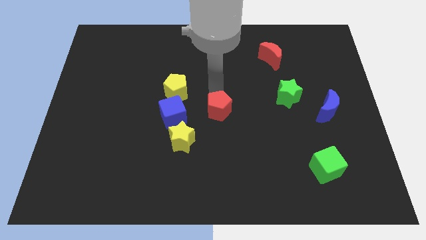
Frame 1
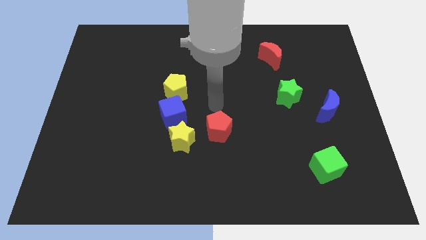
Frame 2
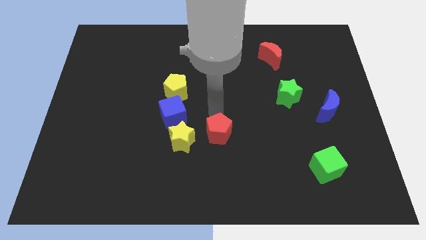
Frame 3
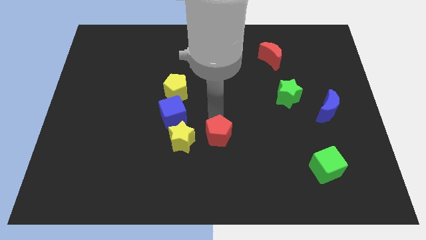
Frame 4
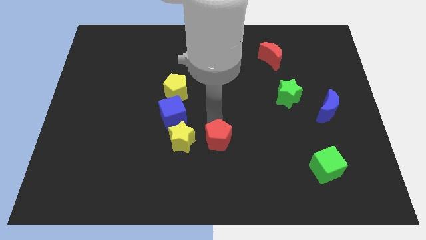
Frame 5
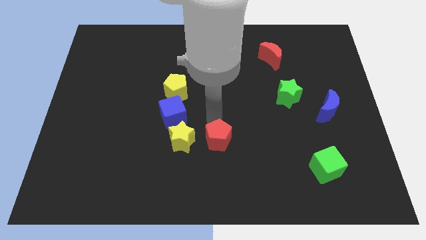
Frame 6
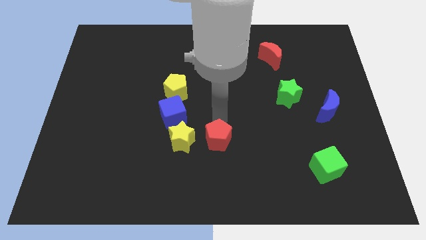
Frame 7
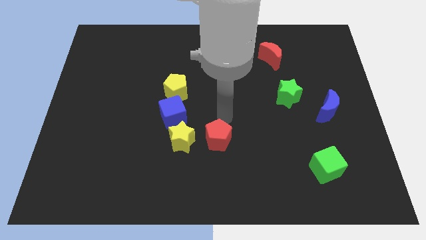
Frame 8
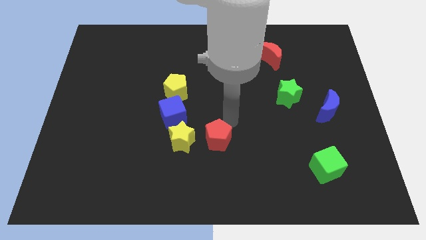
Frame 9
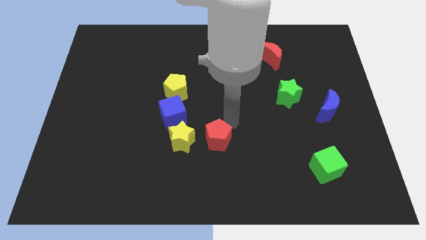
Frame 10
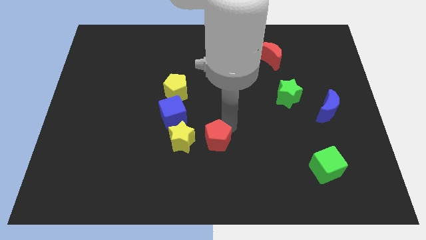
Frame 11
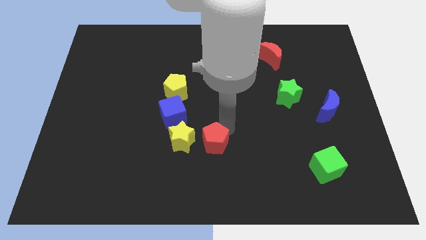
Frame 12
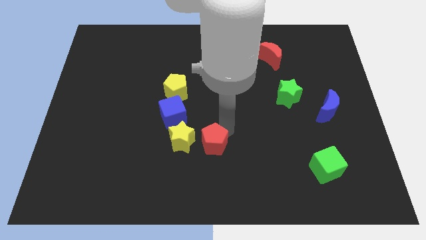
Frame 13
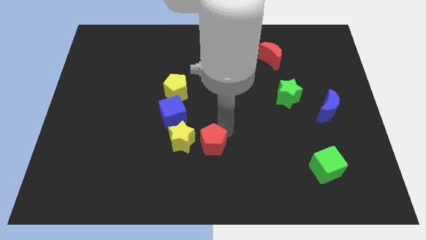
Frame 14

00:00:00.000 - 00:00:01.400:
place red pentagon to the right of yellow star

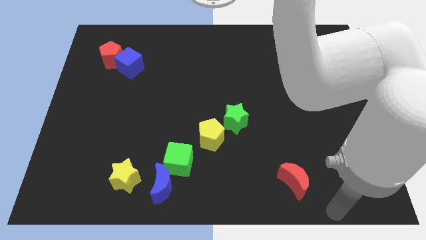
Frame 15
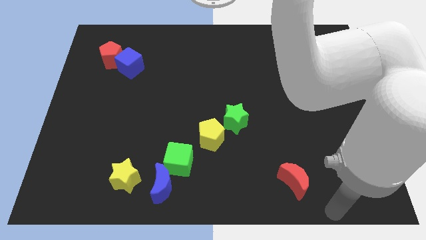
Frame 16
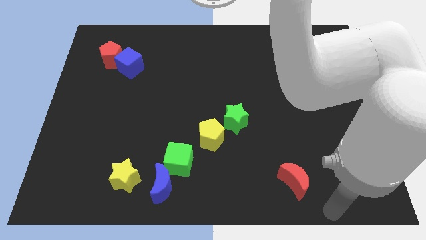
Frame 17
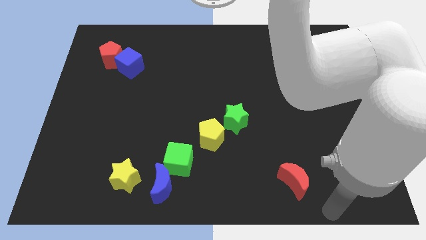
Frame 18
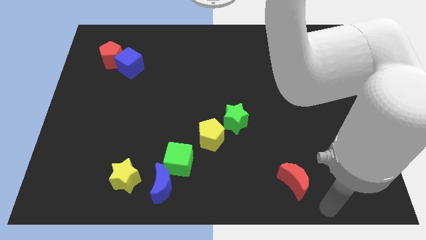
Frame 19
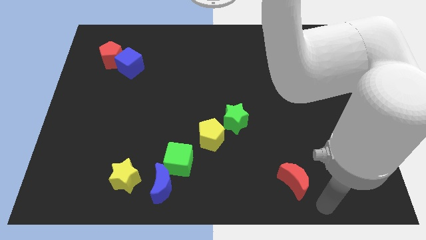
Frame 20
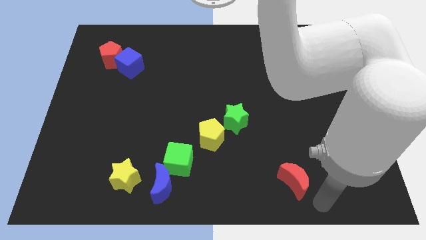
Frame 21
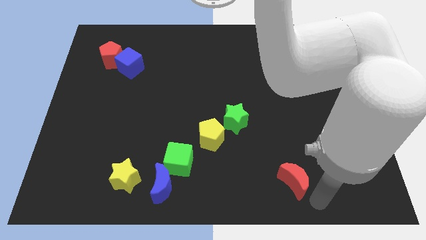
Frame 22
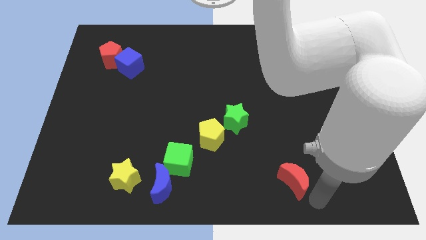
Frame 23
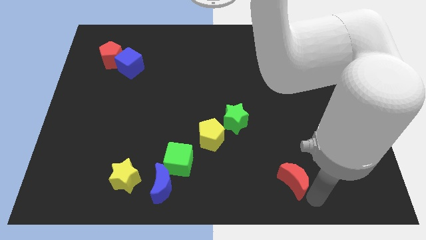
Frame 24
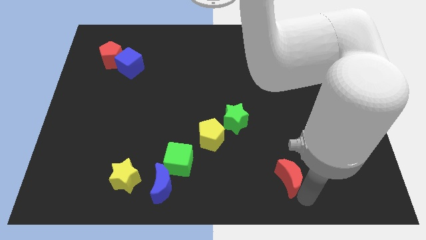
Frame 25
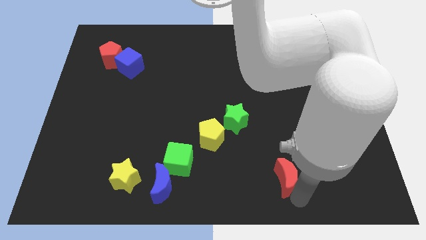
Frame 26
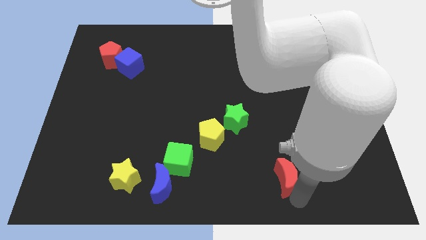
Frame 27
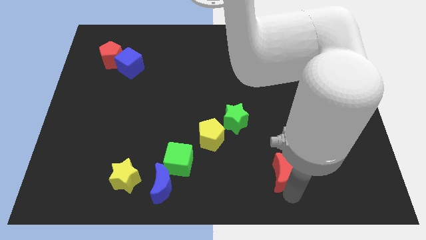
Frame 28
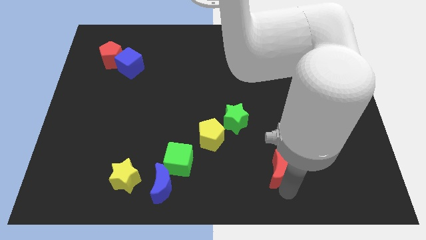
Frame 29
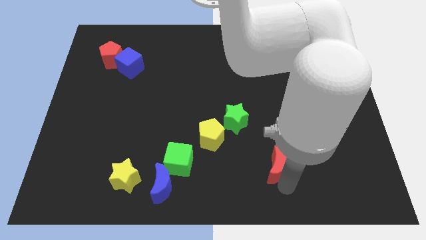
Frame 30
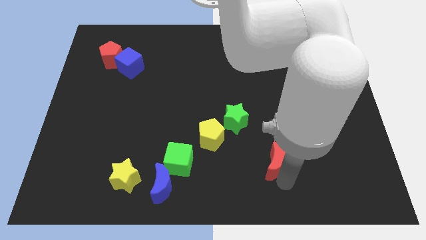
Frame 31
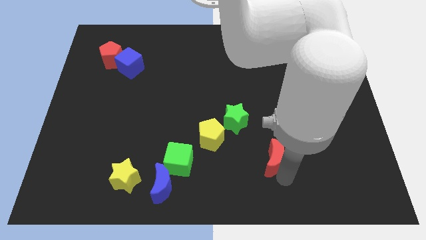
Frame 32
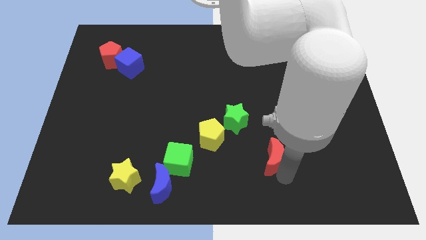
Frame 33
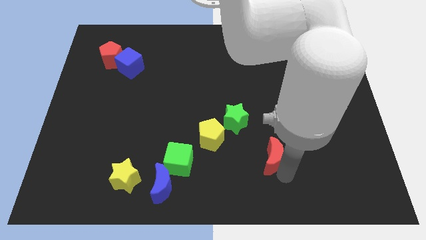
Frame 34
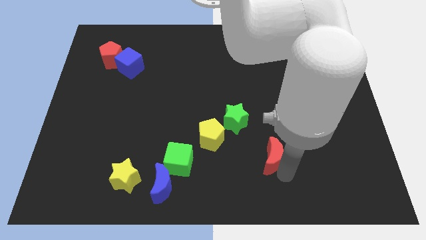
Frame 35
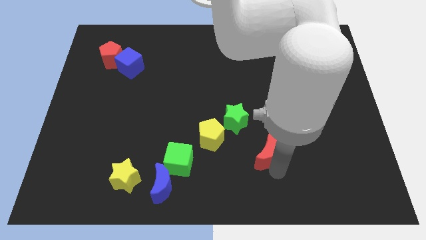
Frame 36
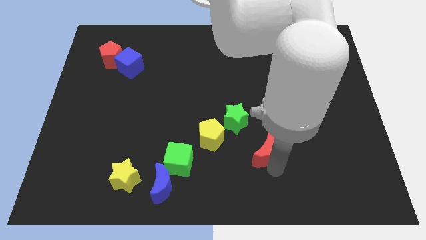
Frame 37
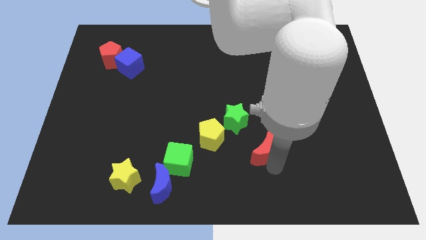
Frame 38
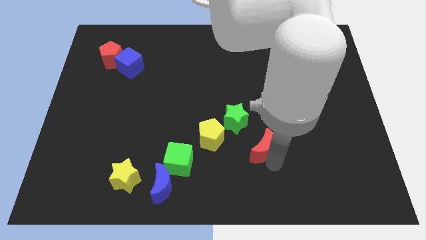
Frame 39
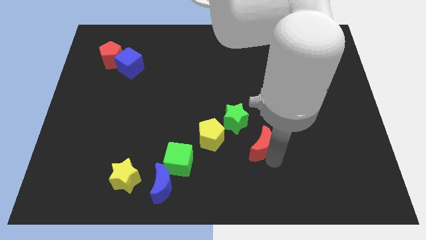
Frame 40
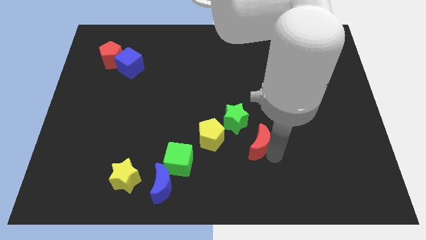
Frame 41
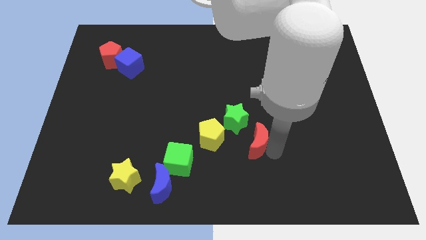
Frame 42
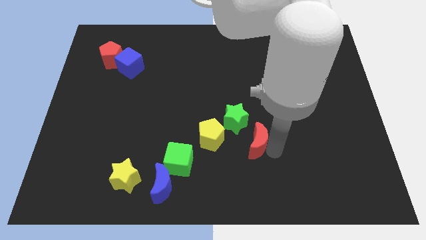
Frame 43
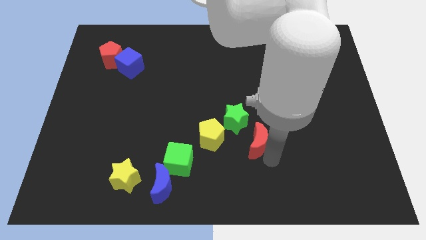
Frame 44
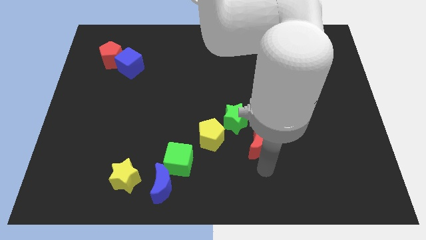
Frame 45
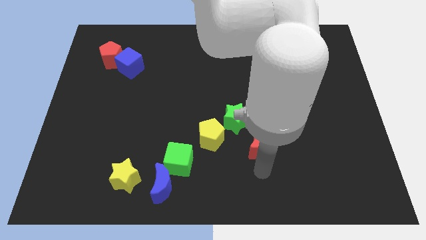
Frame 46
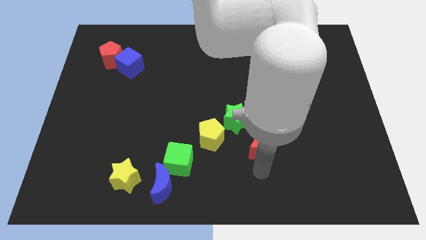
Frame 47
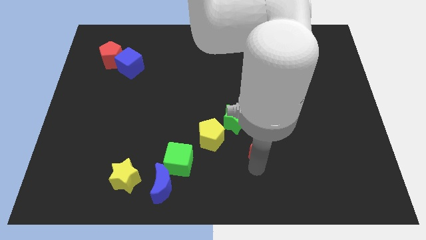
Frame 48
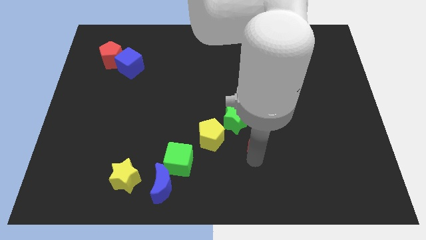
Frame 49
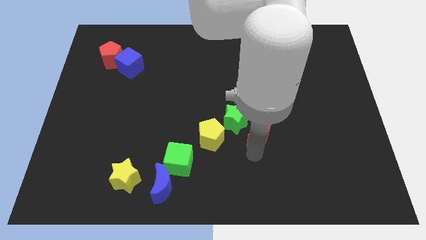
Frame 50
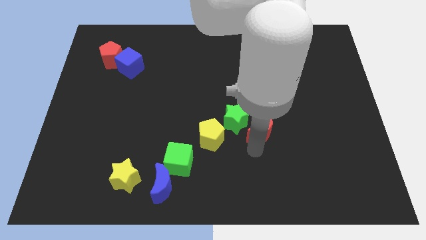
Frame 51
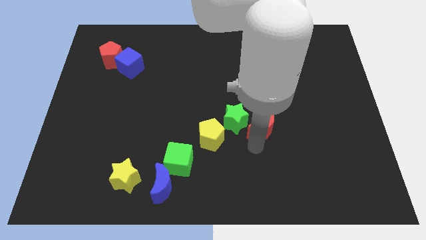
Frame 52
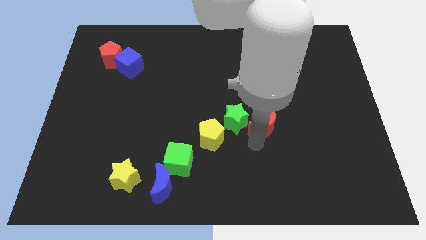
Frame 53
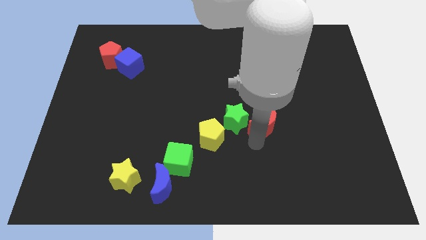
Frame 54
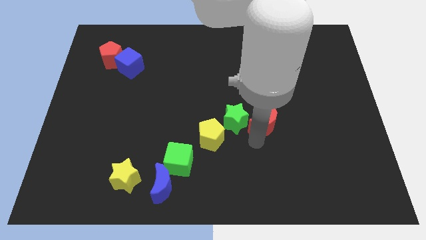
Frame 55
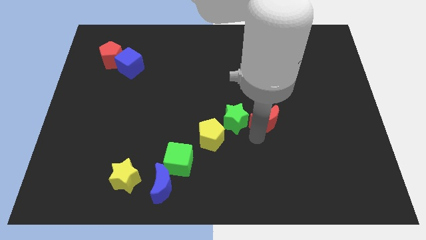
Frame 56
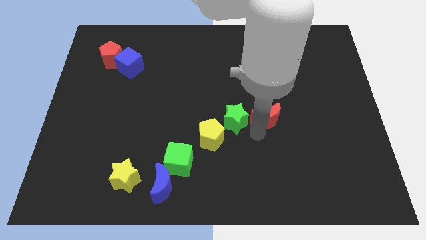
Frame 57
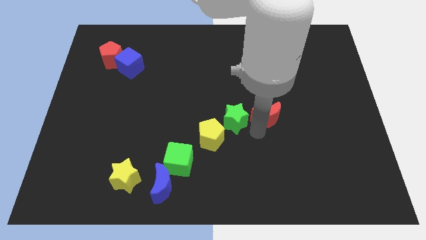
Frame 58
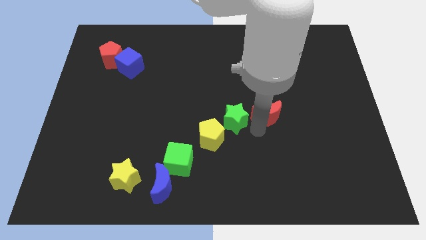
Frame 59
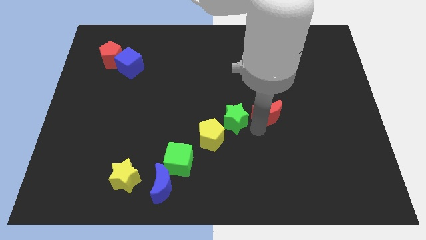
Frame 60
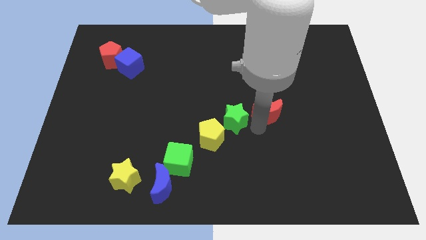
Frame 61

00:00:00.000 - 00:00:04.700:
place the red crescent to the right side of the green star

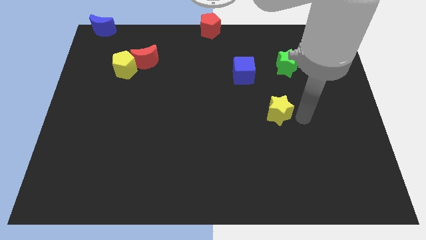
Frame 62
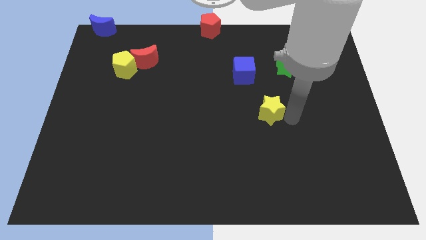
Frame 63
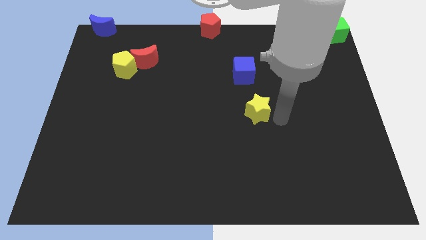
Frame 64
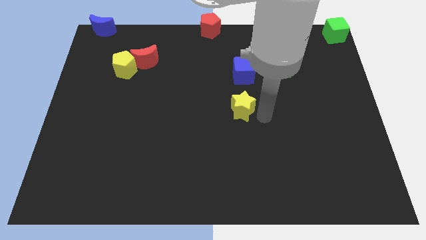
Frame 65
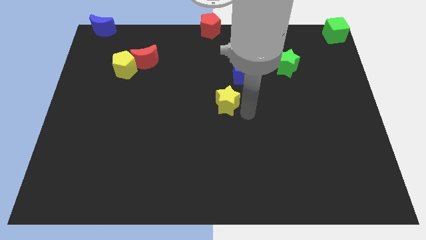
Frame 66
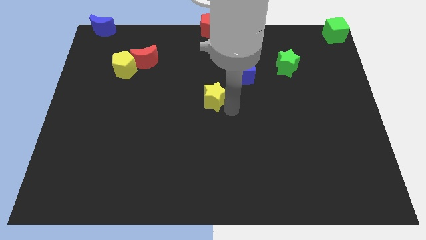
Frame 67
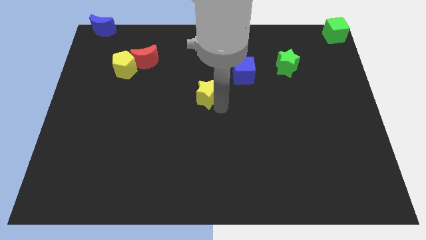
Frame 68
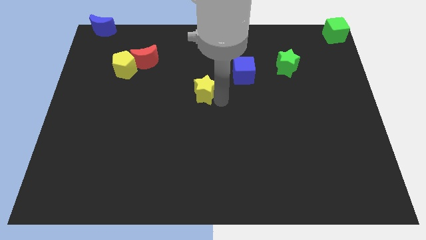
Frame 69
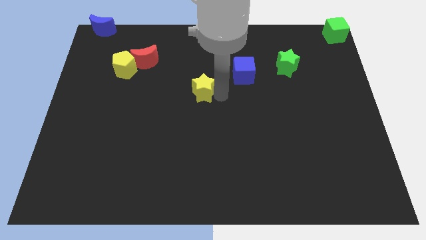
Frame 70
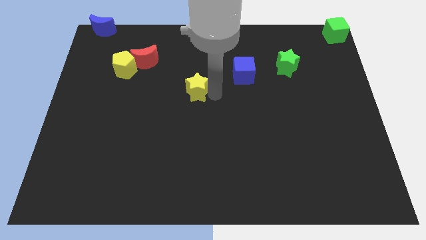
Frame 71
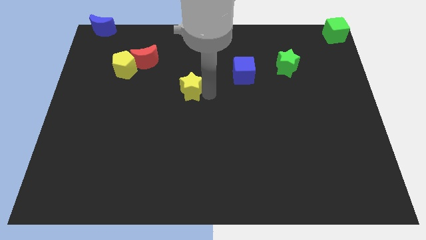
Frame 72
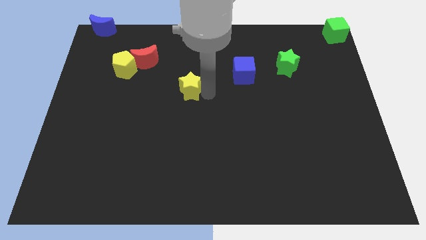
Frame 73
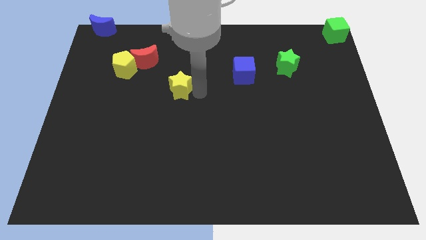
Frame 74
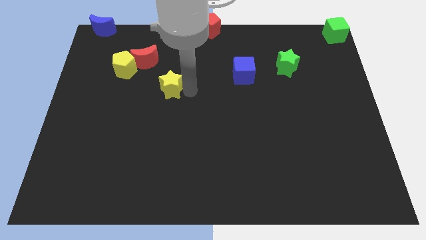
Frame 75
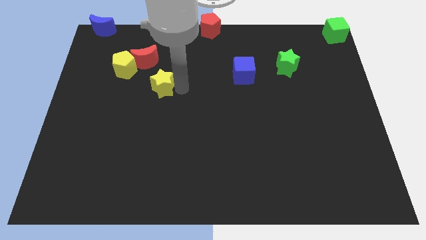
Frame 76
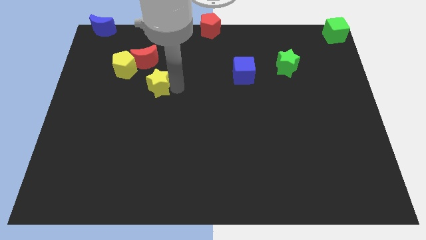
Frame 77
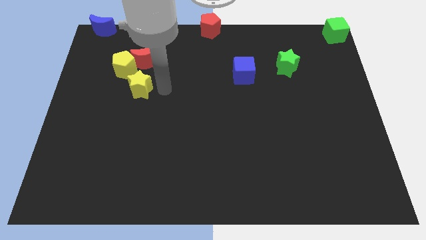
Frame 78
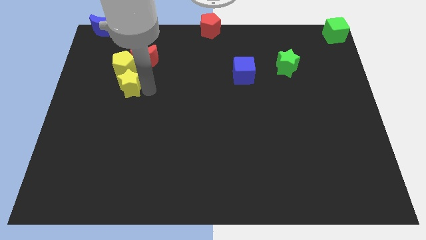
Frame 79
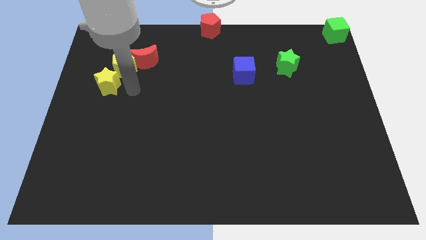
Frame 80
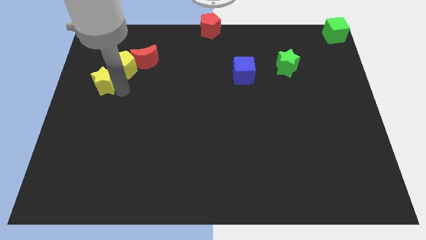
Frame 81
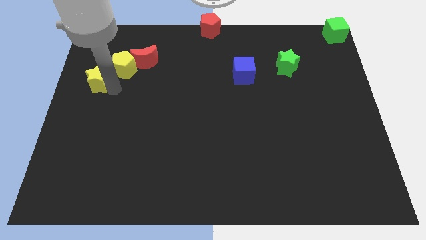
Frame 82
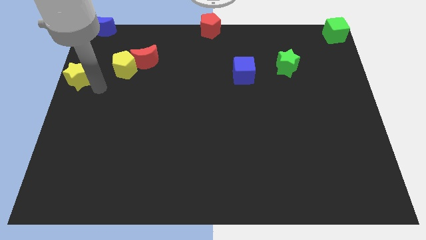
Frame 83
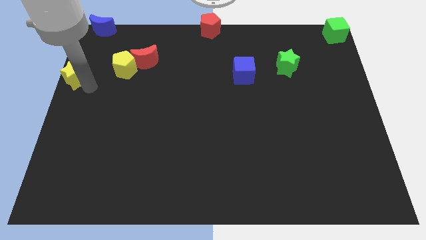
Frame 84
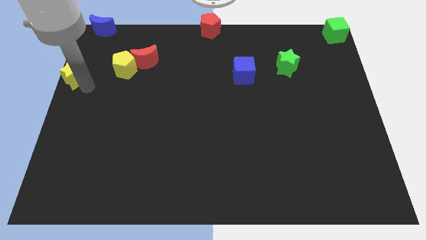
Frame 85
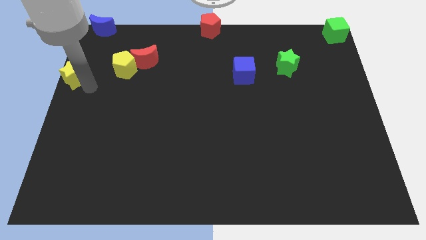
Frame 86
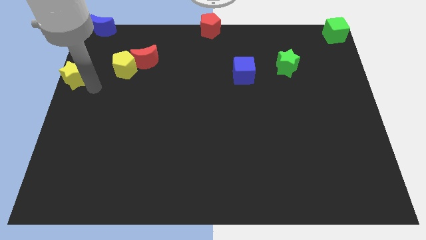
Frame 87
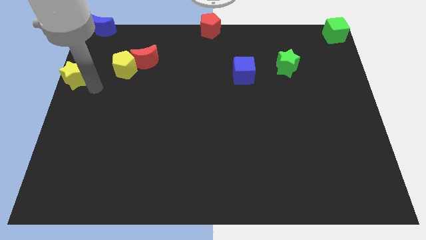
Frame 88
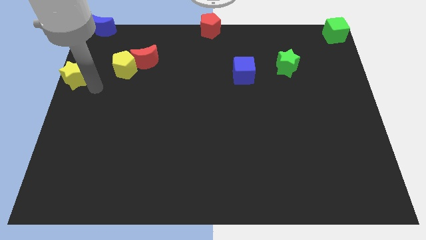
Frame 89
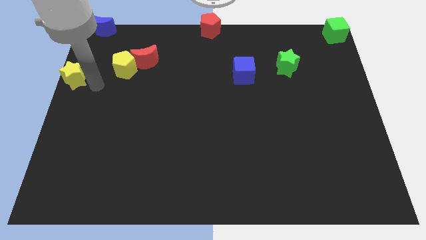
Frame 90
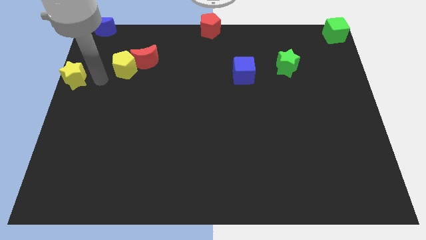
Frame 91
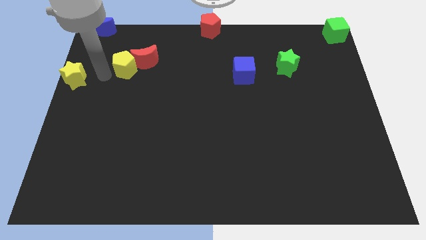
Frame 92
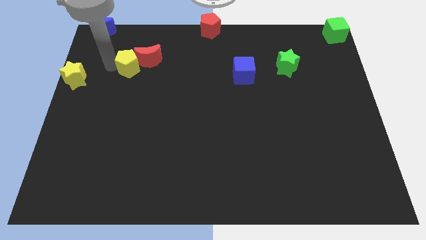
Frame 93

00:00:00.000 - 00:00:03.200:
move the yellow star diagonally bottom left to the yellow pentagon
